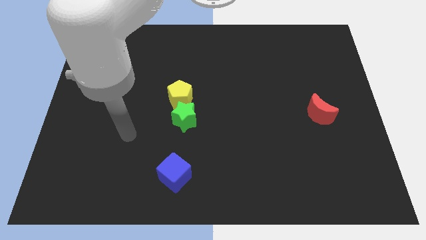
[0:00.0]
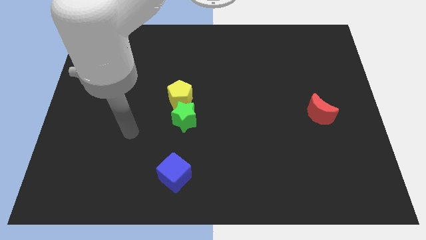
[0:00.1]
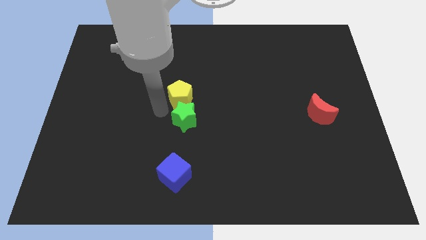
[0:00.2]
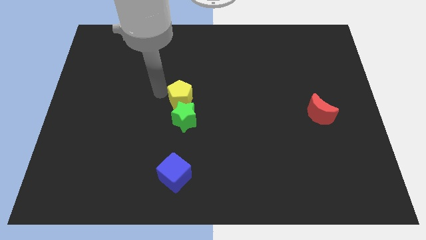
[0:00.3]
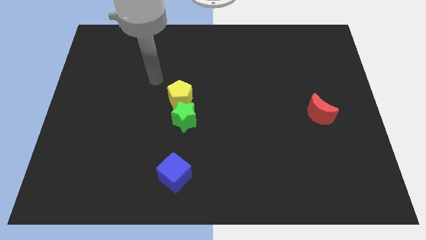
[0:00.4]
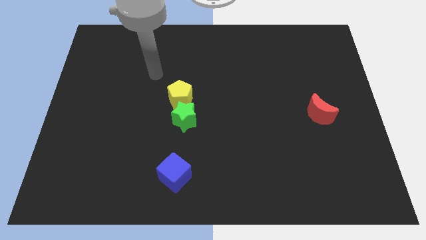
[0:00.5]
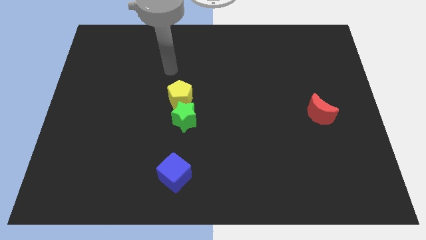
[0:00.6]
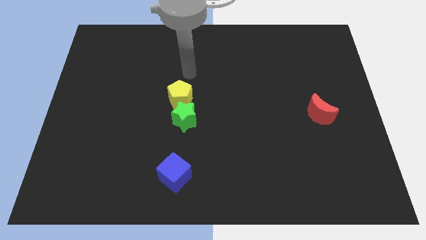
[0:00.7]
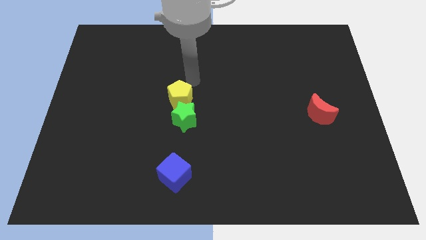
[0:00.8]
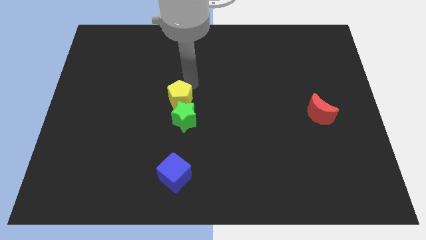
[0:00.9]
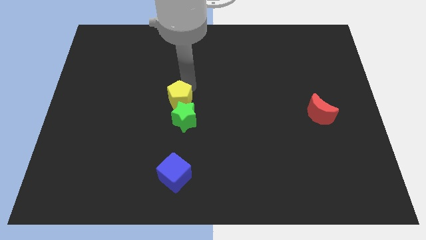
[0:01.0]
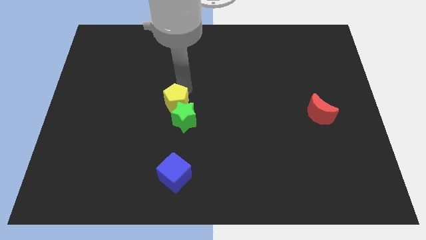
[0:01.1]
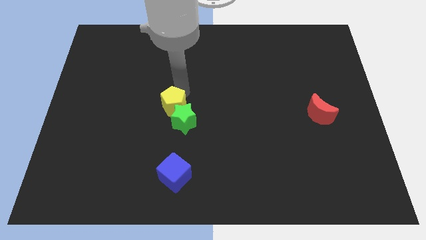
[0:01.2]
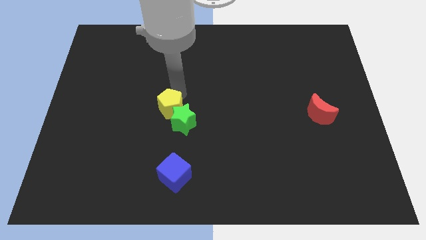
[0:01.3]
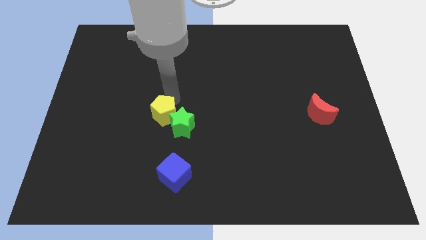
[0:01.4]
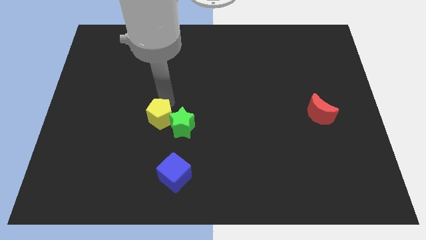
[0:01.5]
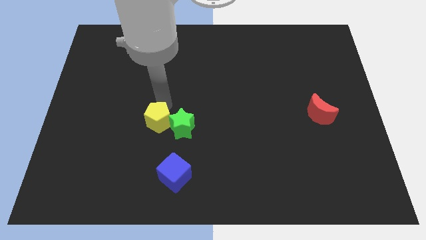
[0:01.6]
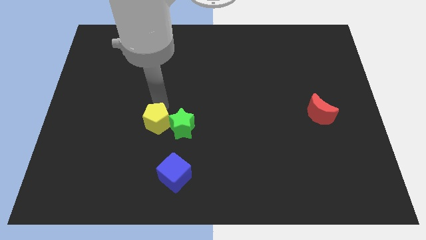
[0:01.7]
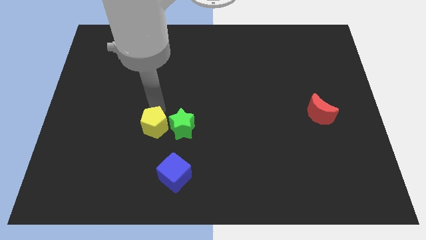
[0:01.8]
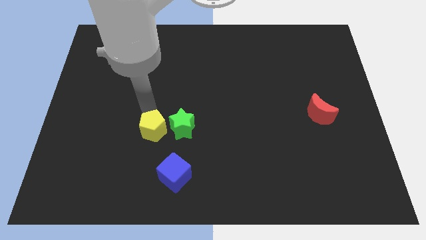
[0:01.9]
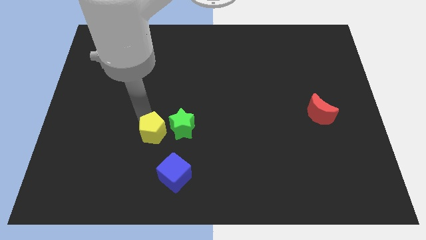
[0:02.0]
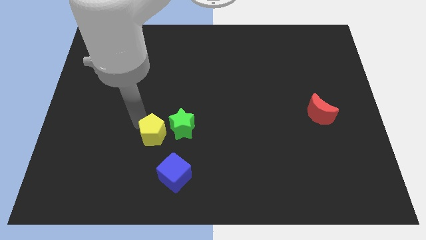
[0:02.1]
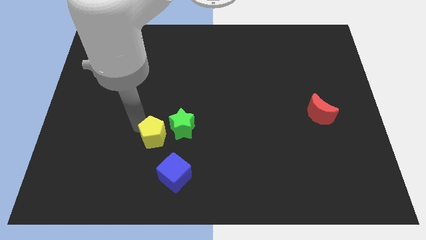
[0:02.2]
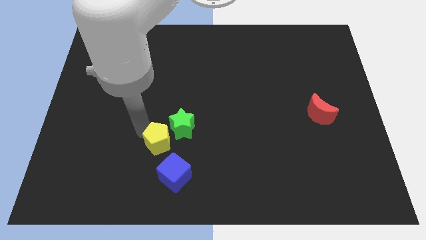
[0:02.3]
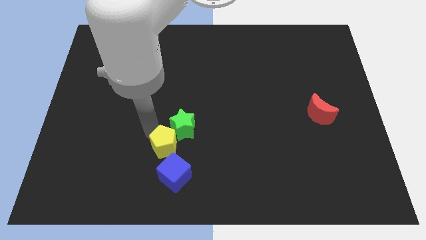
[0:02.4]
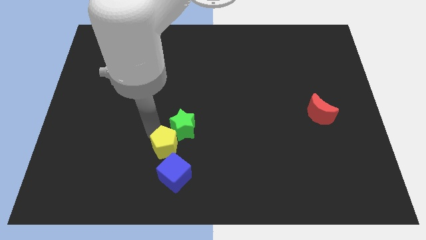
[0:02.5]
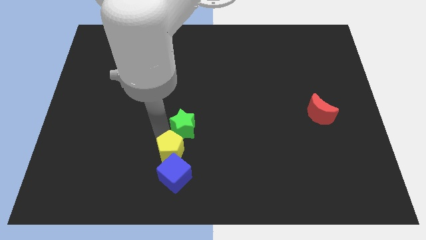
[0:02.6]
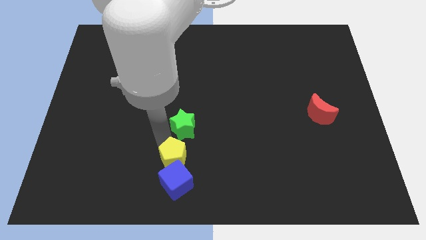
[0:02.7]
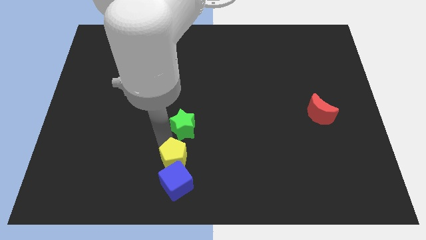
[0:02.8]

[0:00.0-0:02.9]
slide the pentagon close to the blue block

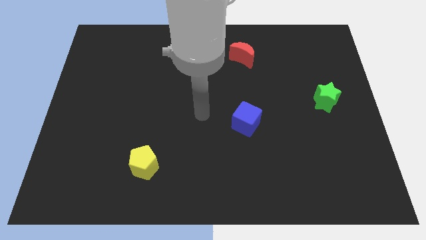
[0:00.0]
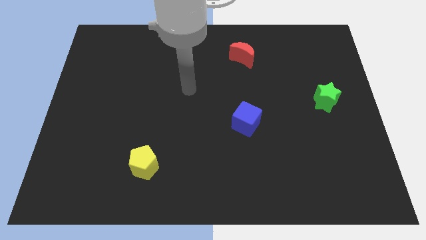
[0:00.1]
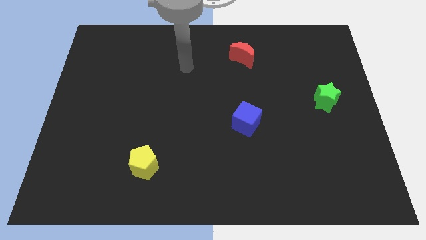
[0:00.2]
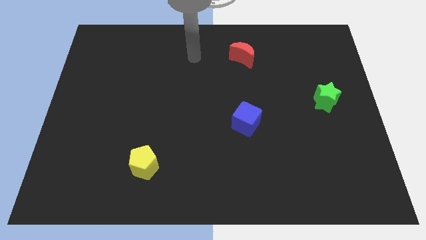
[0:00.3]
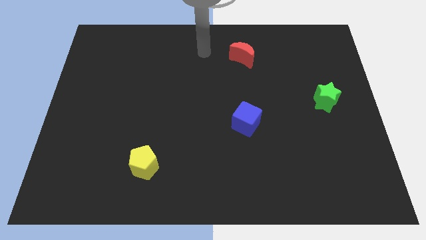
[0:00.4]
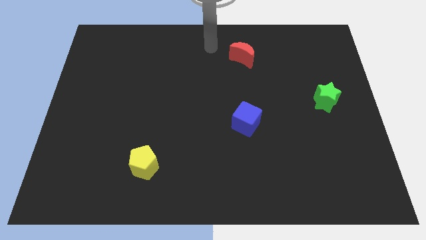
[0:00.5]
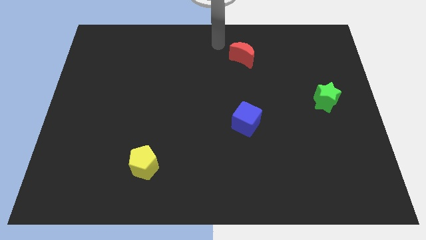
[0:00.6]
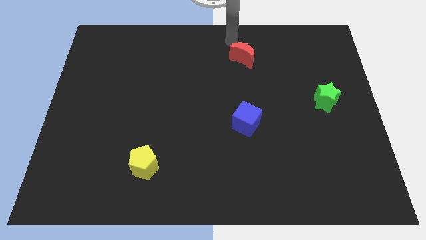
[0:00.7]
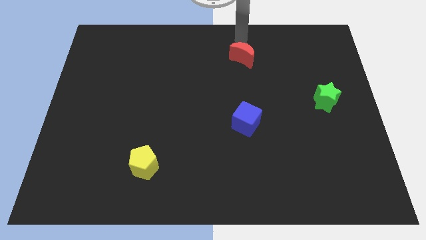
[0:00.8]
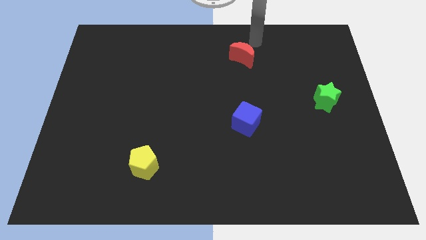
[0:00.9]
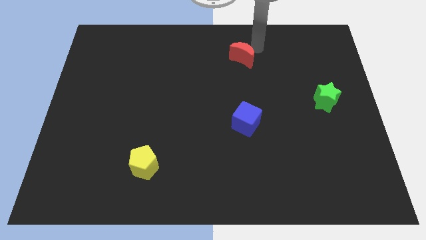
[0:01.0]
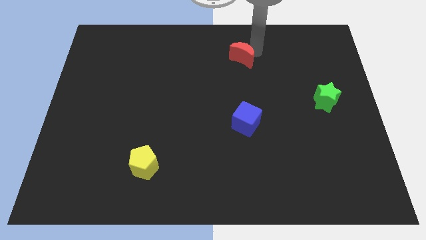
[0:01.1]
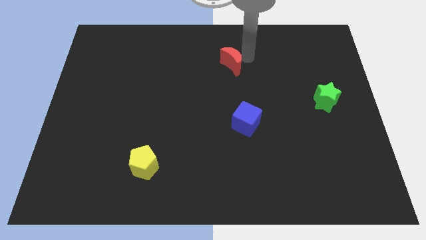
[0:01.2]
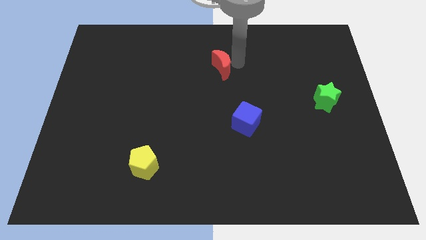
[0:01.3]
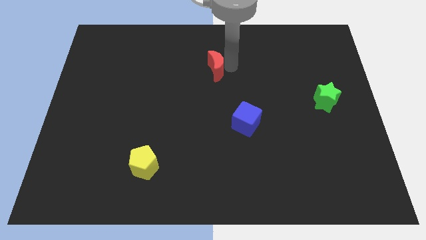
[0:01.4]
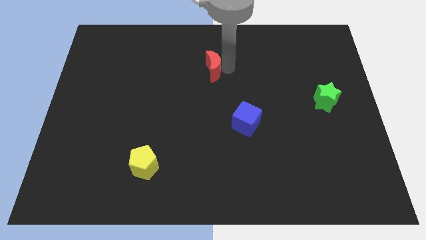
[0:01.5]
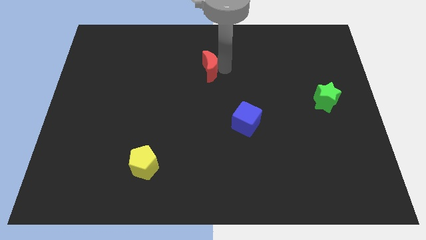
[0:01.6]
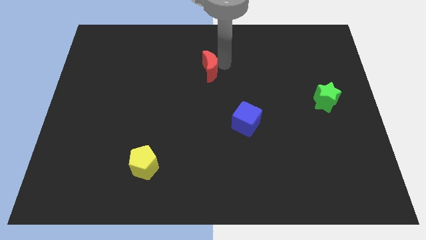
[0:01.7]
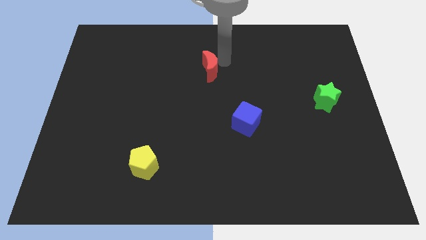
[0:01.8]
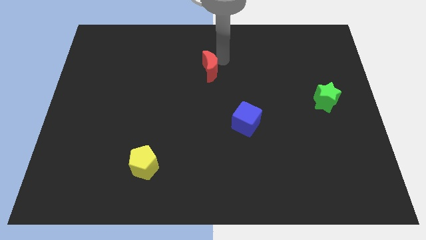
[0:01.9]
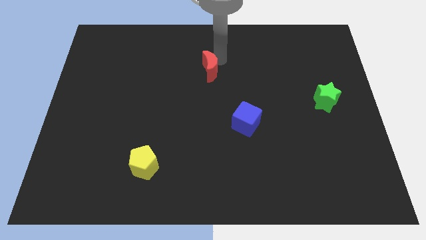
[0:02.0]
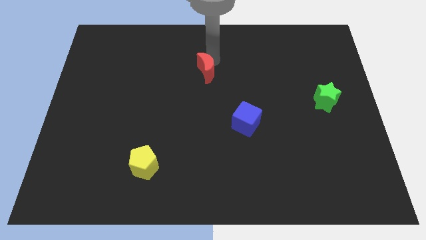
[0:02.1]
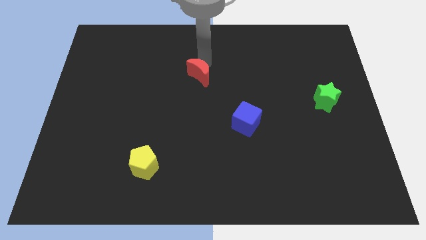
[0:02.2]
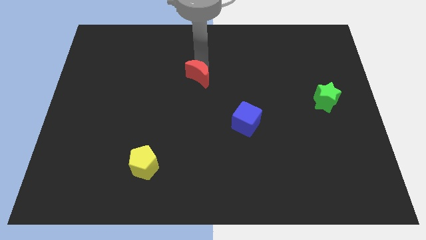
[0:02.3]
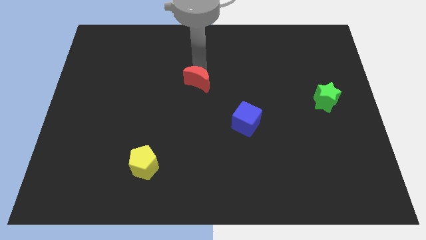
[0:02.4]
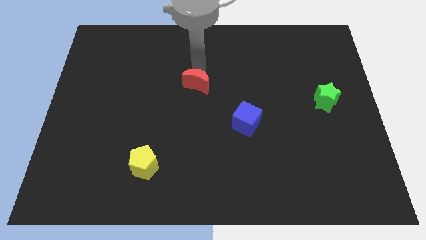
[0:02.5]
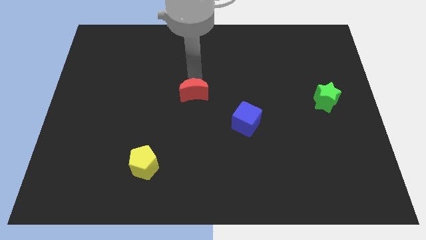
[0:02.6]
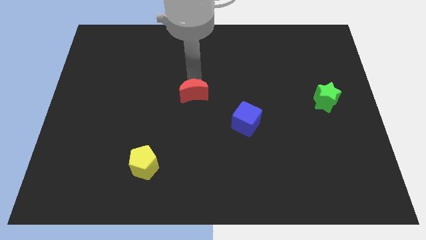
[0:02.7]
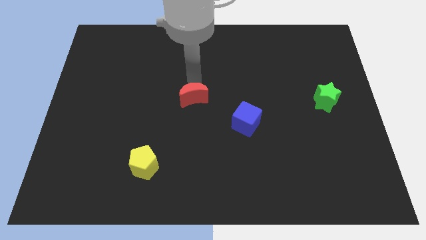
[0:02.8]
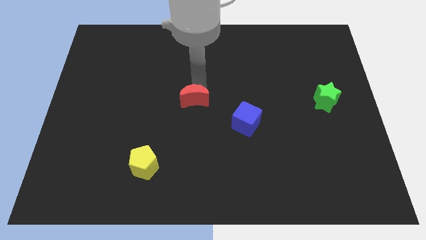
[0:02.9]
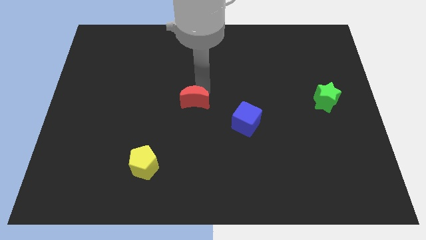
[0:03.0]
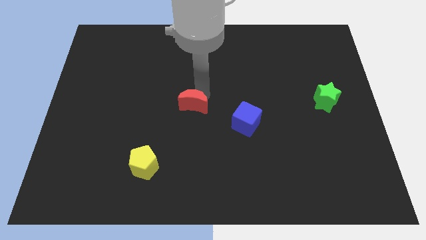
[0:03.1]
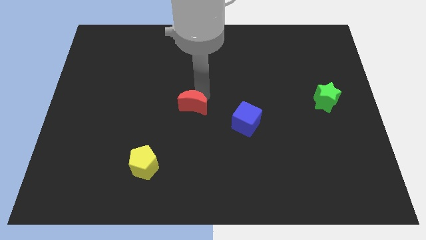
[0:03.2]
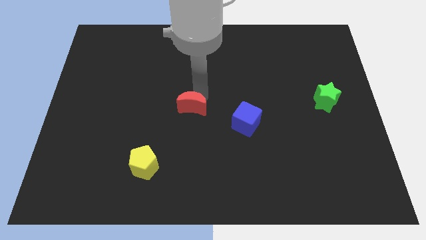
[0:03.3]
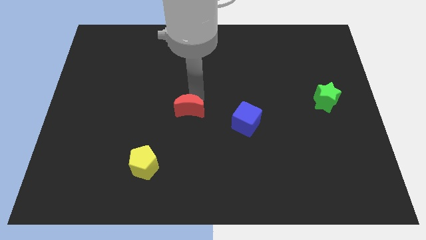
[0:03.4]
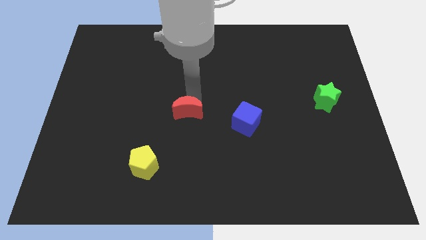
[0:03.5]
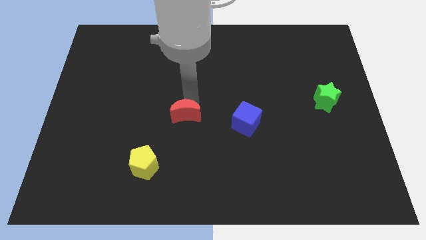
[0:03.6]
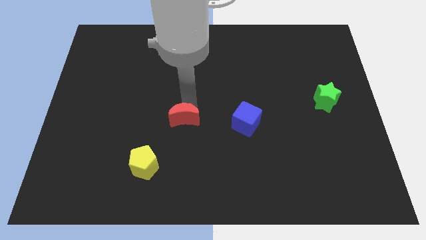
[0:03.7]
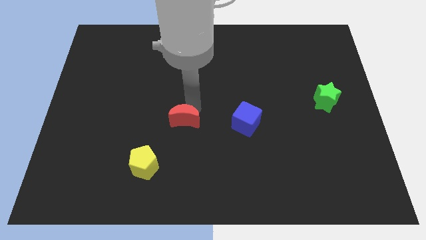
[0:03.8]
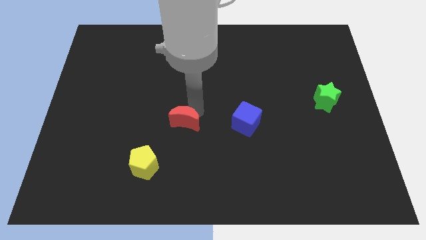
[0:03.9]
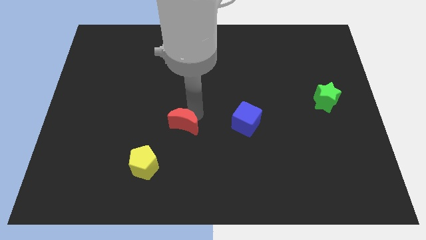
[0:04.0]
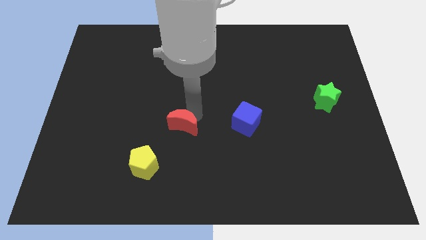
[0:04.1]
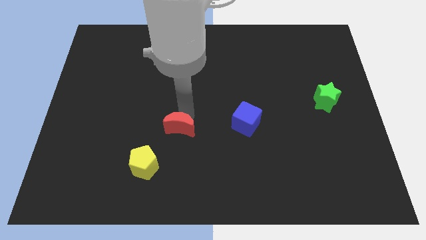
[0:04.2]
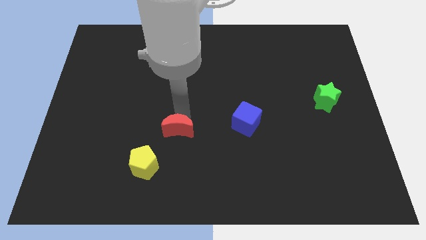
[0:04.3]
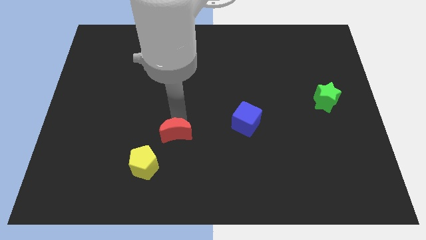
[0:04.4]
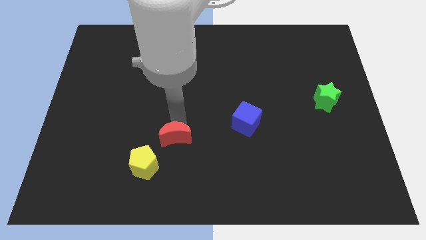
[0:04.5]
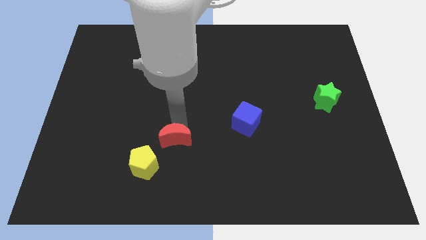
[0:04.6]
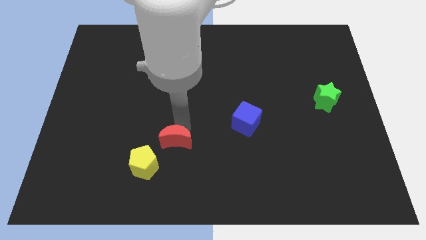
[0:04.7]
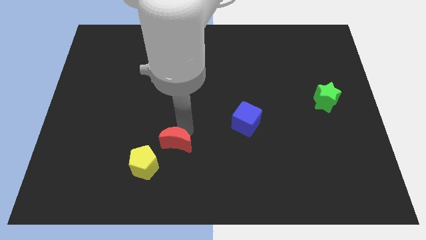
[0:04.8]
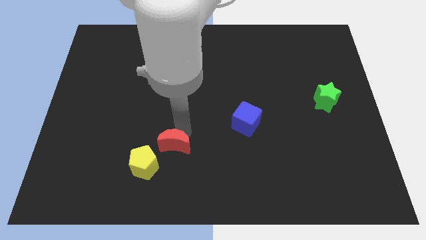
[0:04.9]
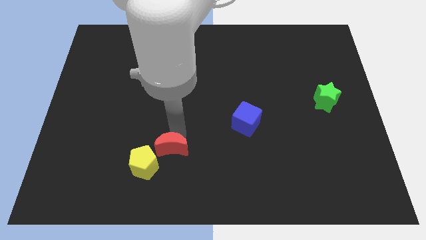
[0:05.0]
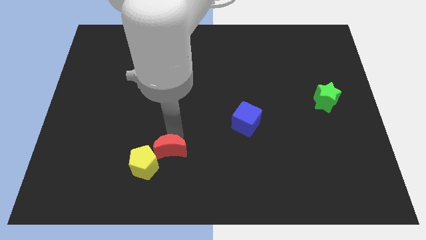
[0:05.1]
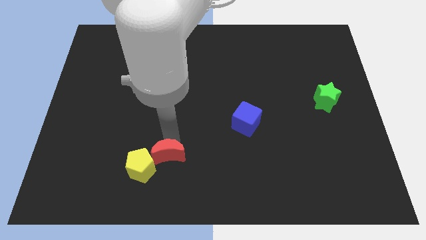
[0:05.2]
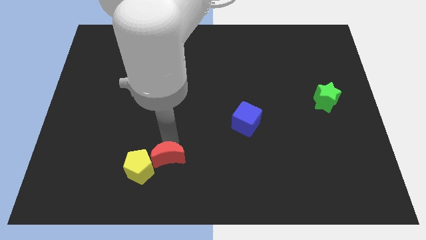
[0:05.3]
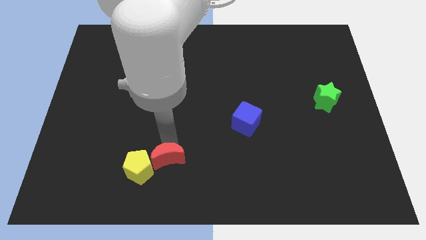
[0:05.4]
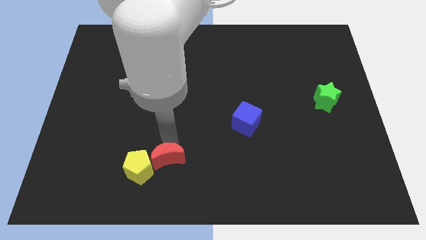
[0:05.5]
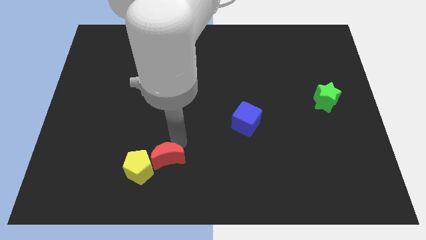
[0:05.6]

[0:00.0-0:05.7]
push the red block next to the yellow pentagon

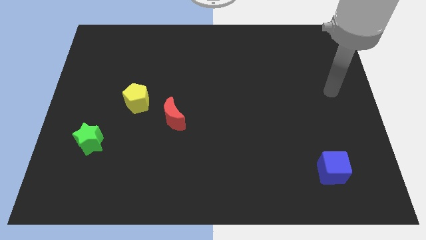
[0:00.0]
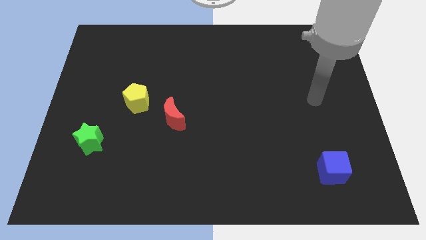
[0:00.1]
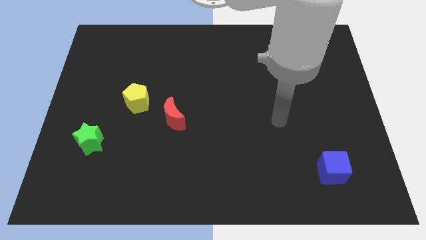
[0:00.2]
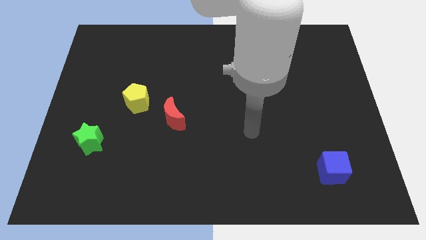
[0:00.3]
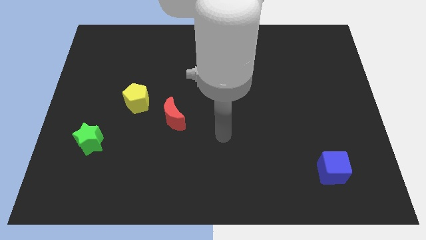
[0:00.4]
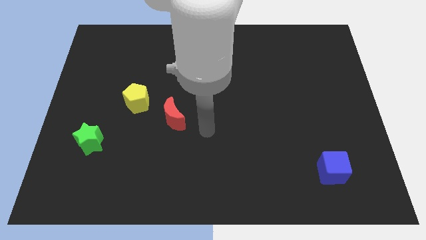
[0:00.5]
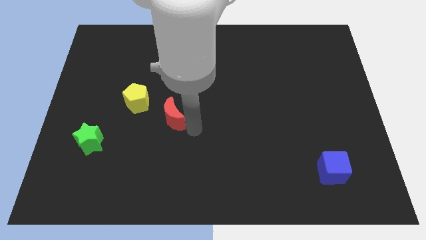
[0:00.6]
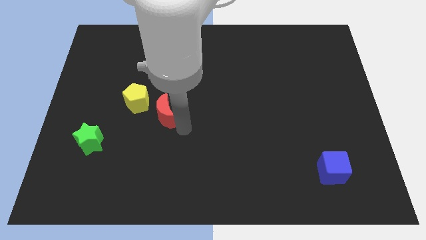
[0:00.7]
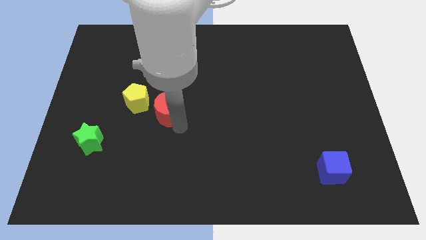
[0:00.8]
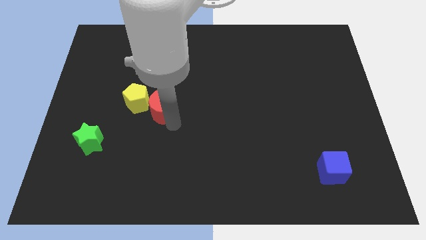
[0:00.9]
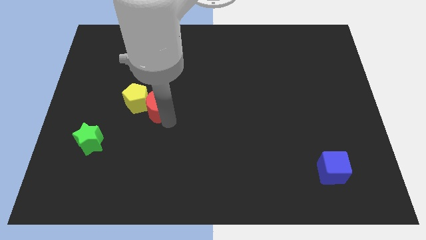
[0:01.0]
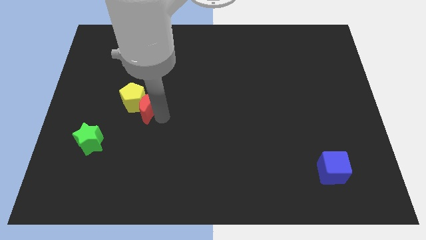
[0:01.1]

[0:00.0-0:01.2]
move the red moon towards the yellow block
